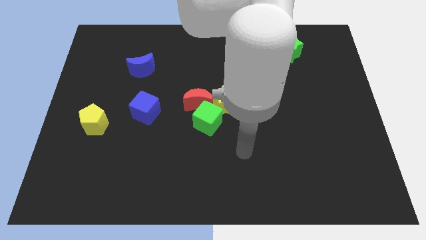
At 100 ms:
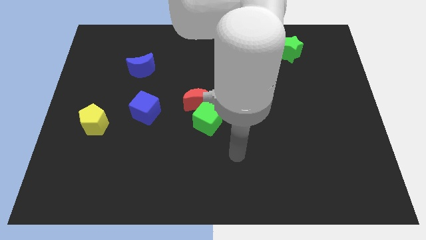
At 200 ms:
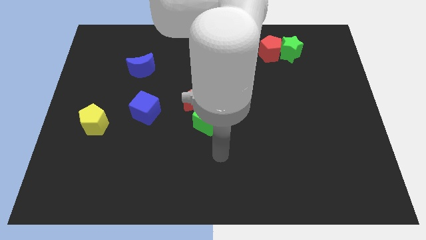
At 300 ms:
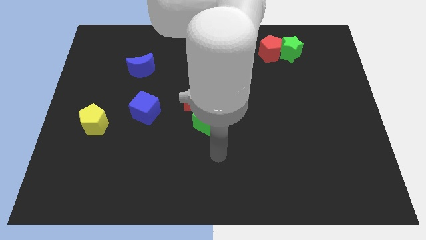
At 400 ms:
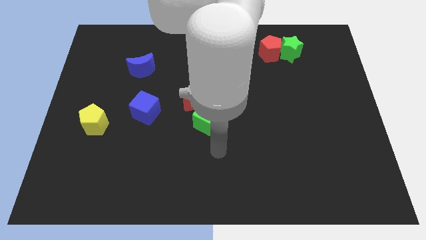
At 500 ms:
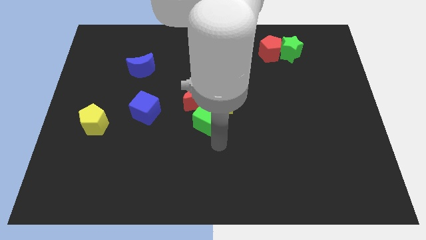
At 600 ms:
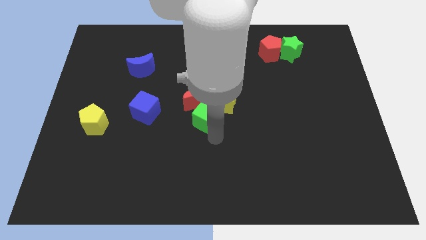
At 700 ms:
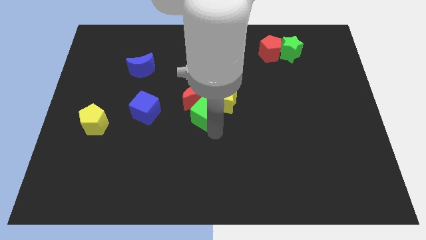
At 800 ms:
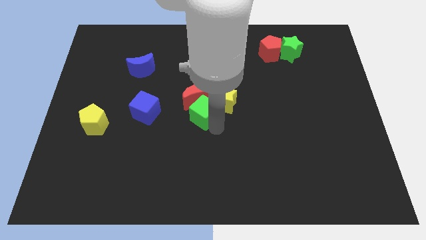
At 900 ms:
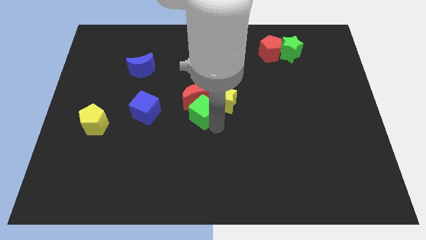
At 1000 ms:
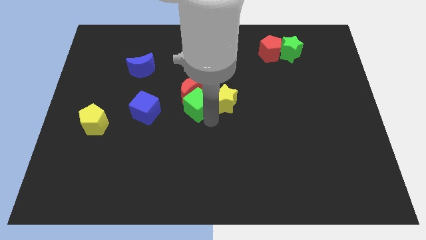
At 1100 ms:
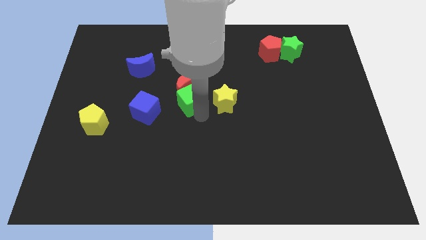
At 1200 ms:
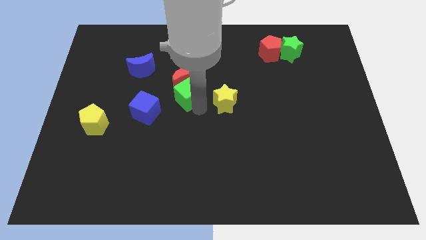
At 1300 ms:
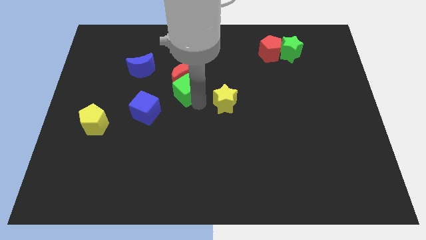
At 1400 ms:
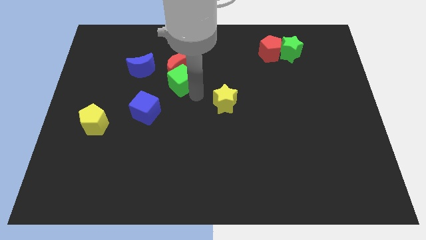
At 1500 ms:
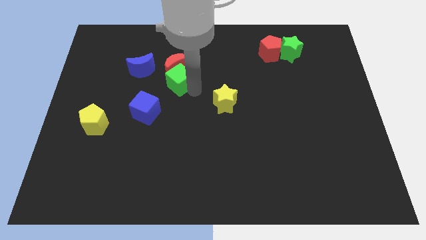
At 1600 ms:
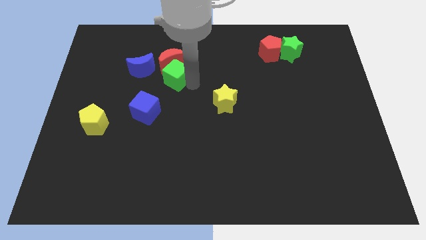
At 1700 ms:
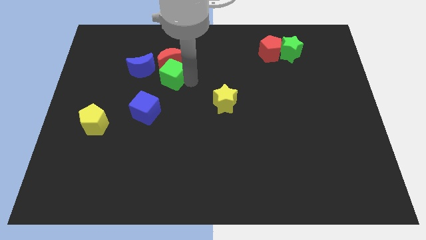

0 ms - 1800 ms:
push the green cube along with the red crescent to the top

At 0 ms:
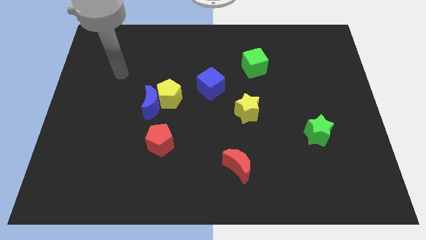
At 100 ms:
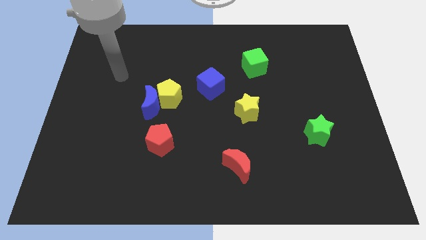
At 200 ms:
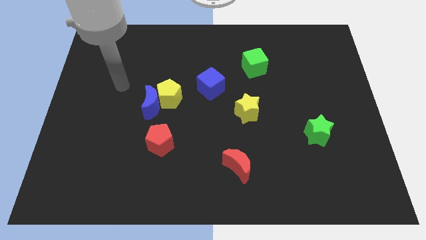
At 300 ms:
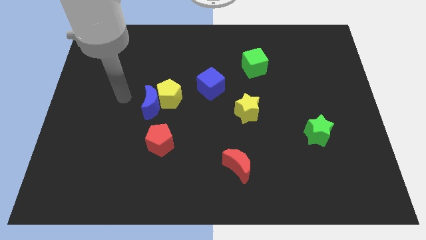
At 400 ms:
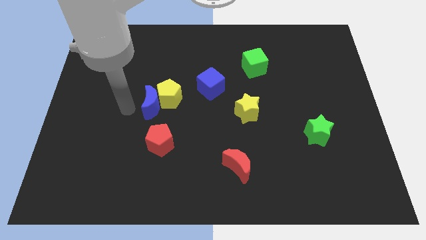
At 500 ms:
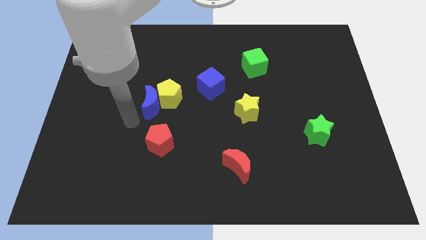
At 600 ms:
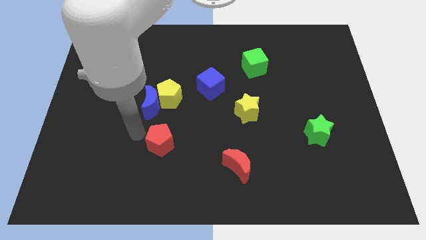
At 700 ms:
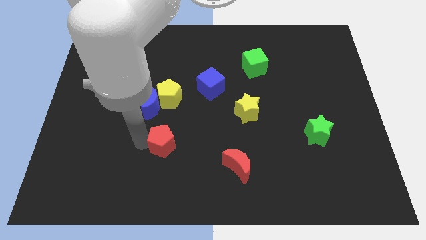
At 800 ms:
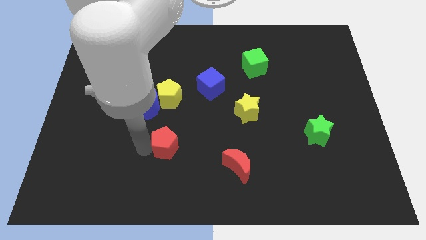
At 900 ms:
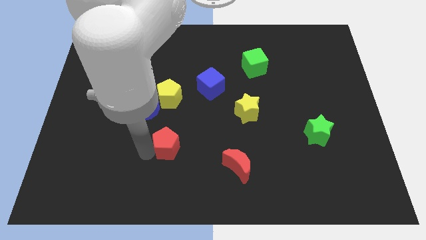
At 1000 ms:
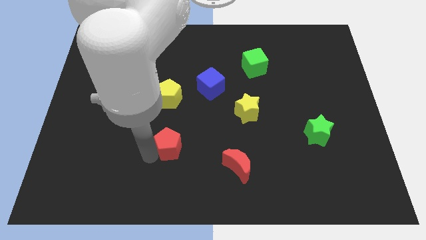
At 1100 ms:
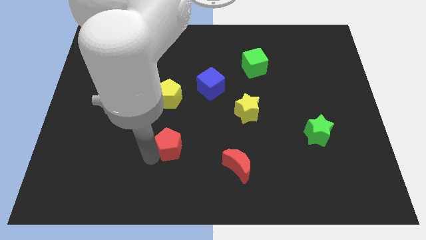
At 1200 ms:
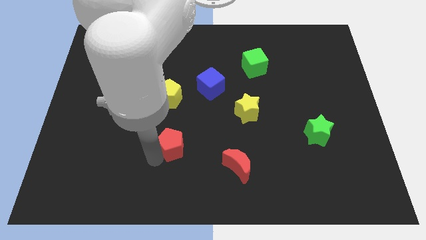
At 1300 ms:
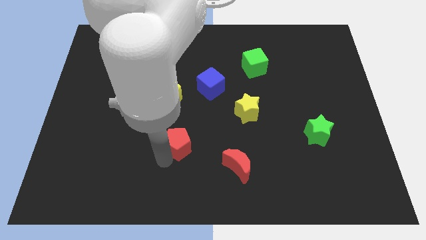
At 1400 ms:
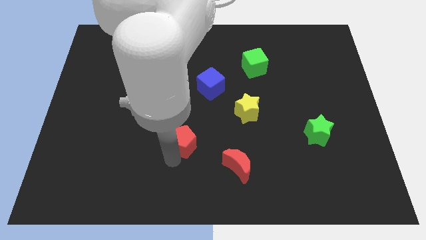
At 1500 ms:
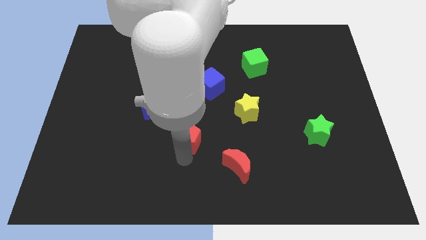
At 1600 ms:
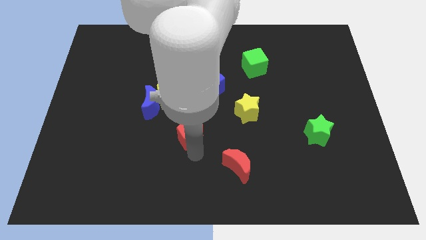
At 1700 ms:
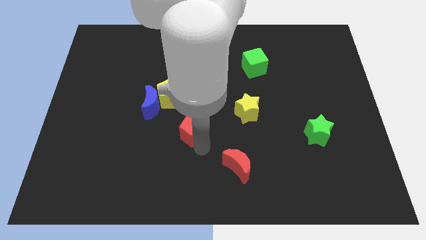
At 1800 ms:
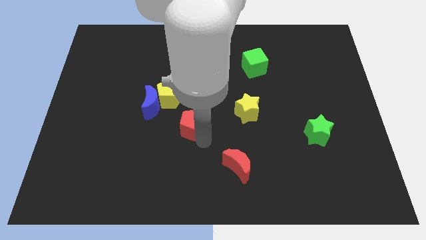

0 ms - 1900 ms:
move the red pentagon in between the yellow pentagon and red crescent

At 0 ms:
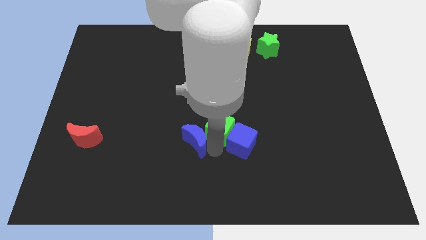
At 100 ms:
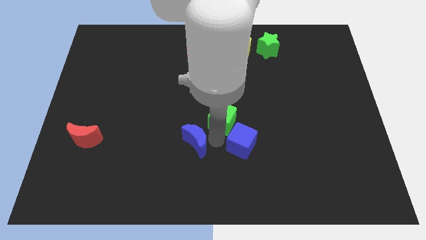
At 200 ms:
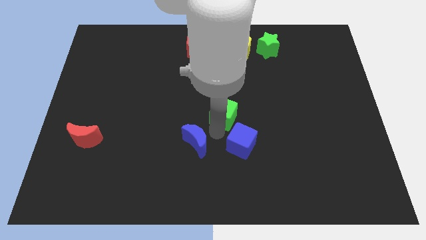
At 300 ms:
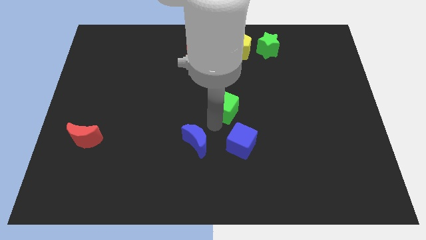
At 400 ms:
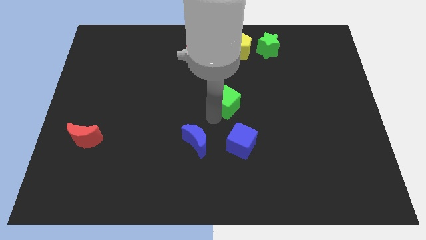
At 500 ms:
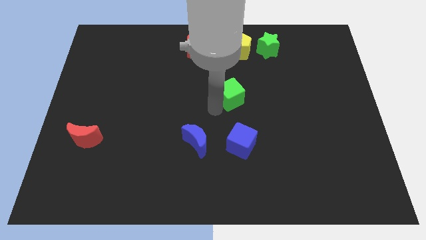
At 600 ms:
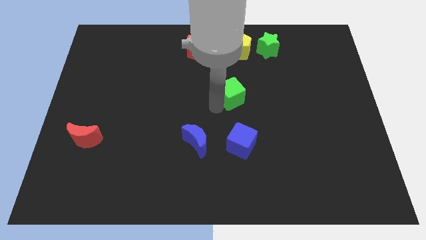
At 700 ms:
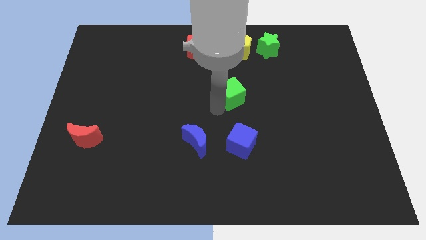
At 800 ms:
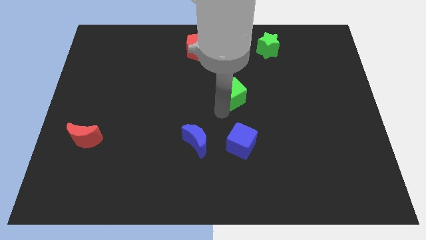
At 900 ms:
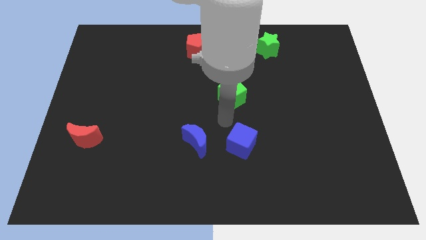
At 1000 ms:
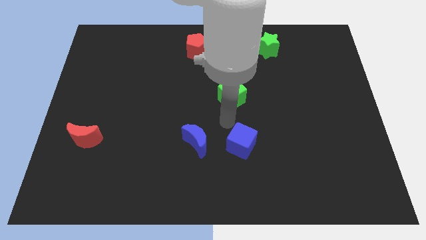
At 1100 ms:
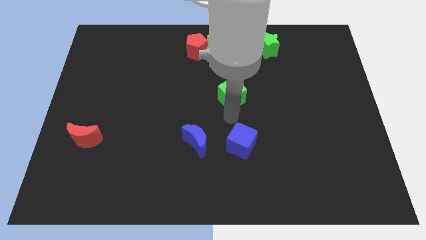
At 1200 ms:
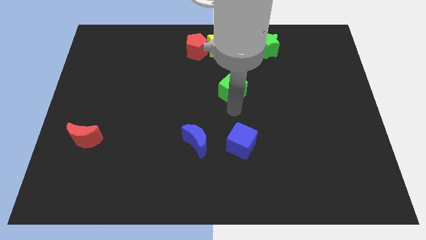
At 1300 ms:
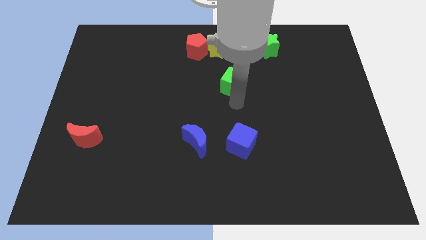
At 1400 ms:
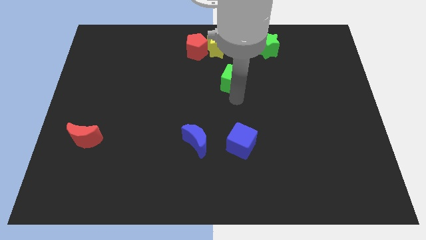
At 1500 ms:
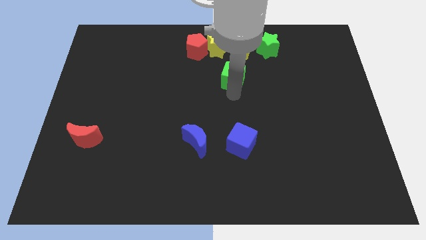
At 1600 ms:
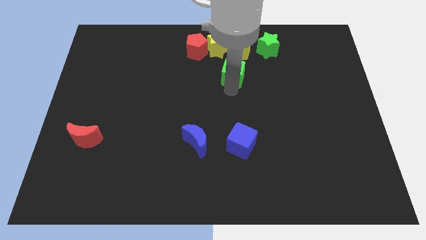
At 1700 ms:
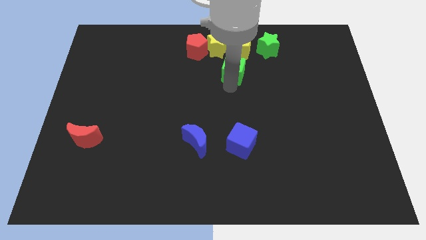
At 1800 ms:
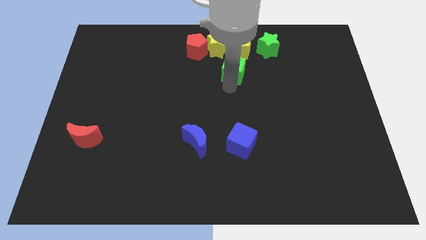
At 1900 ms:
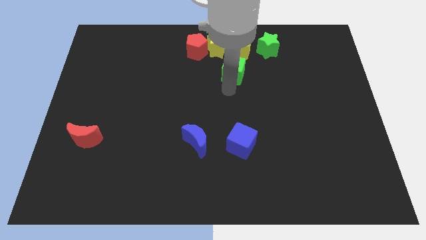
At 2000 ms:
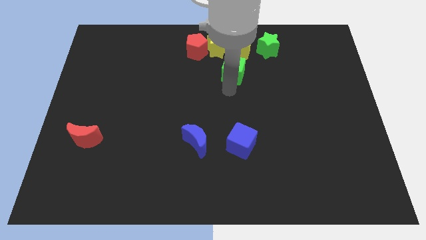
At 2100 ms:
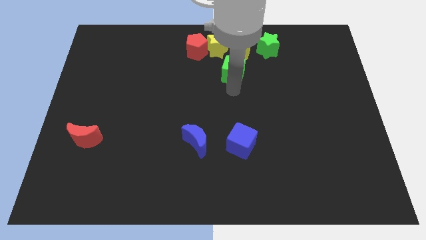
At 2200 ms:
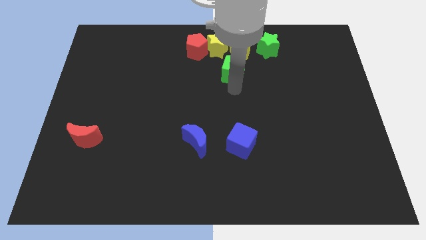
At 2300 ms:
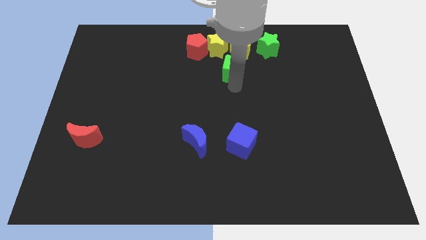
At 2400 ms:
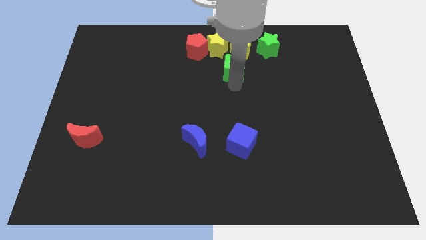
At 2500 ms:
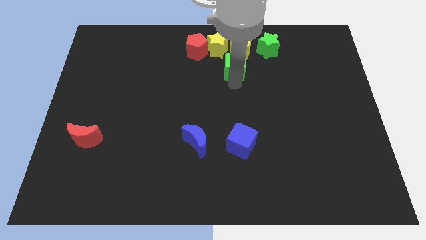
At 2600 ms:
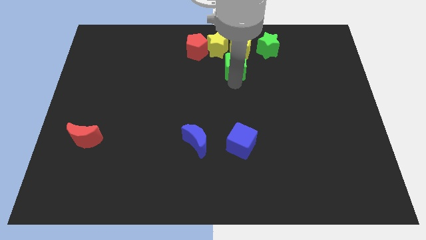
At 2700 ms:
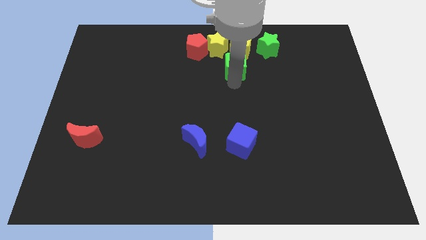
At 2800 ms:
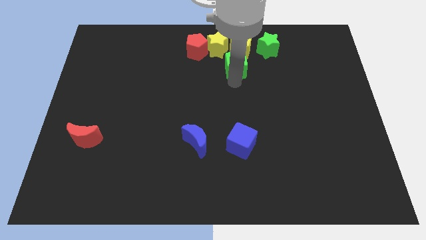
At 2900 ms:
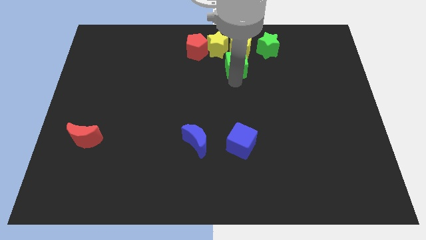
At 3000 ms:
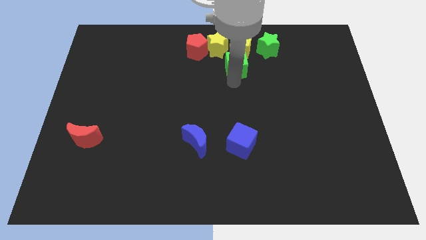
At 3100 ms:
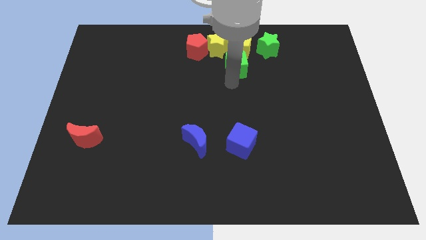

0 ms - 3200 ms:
place the green cube below the yellow pentagon

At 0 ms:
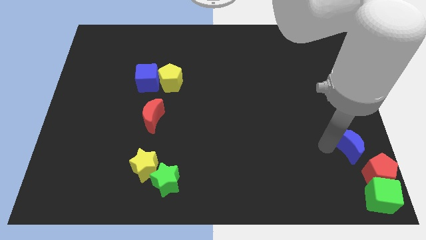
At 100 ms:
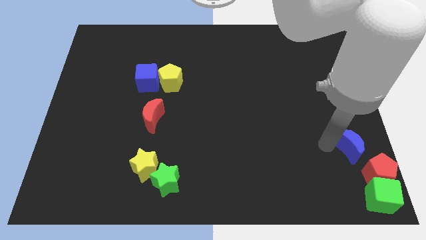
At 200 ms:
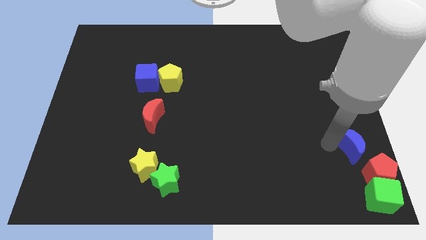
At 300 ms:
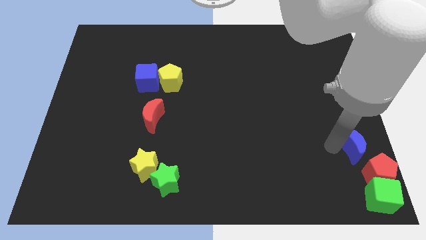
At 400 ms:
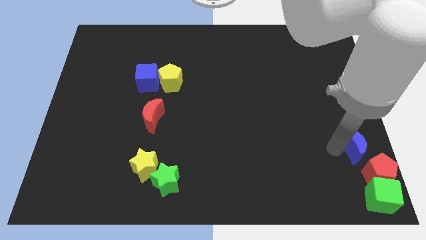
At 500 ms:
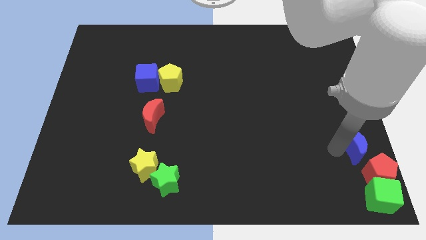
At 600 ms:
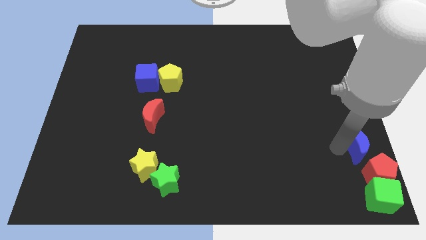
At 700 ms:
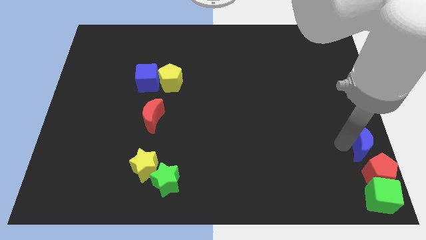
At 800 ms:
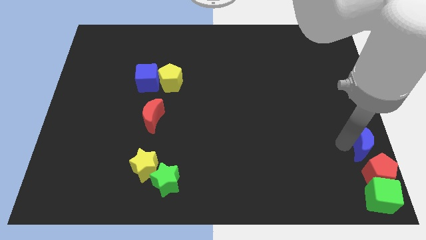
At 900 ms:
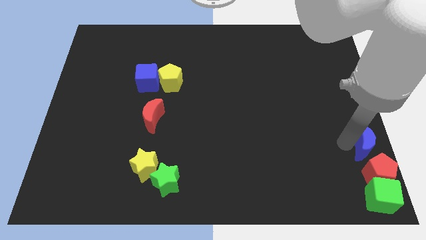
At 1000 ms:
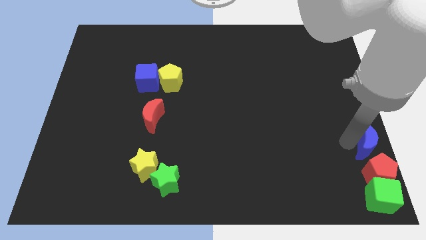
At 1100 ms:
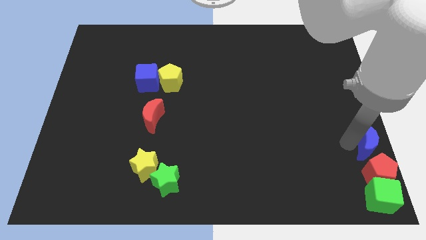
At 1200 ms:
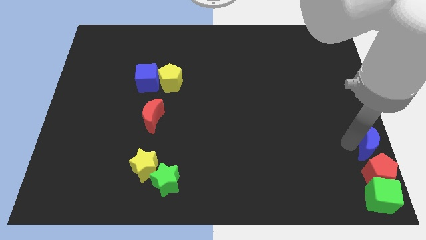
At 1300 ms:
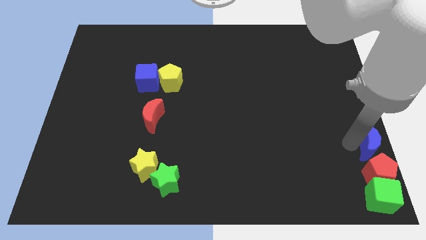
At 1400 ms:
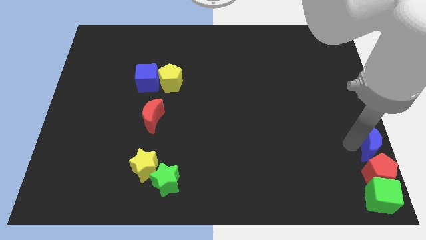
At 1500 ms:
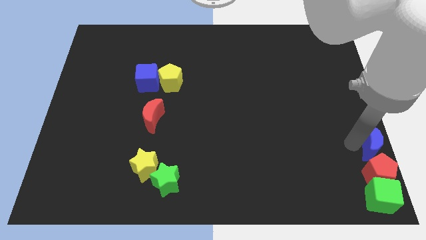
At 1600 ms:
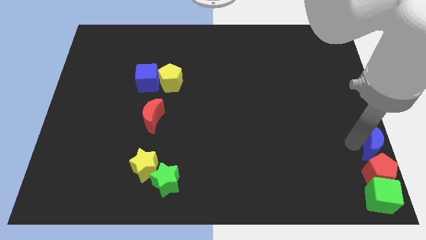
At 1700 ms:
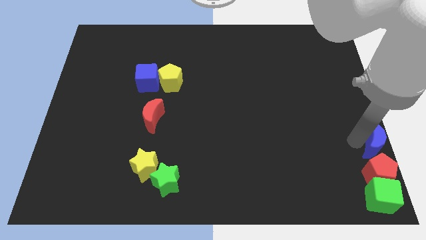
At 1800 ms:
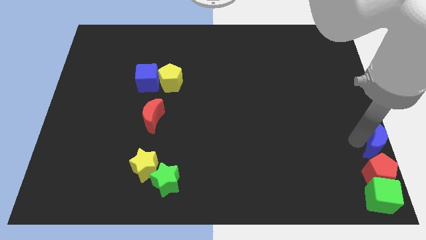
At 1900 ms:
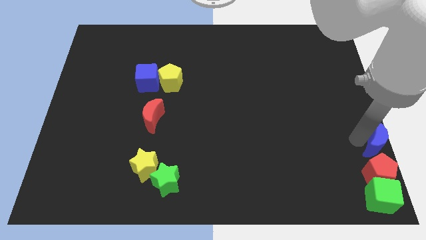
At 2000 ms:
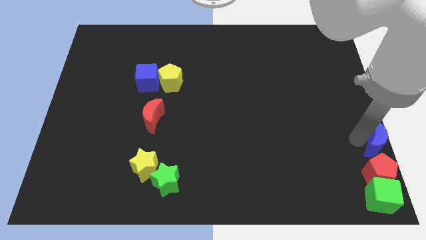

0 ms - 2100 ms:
move the blue moon at the top of the red pentagon
